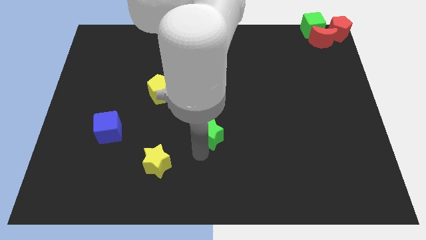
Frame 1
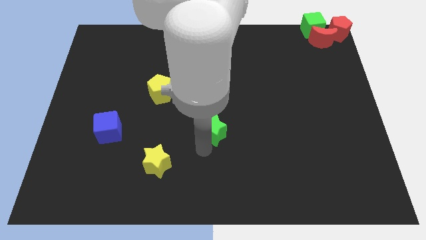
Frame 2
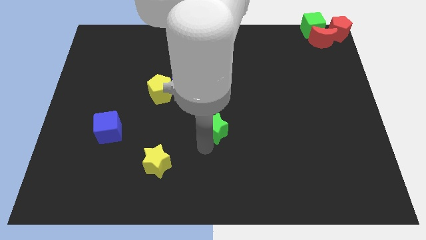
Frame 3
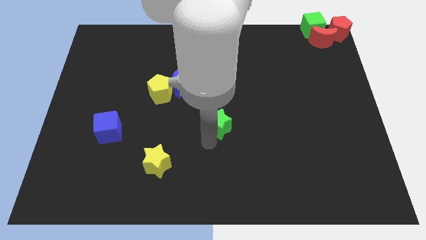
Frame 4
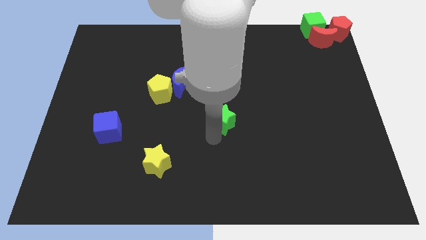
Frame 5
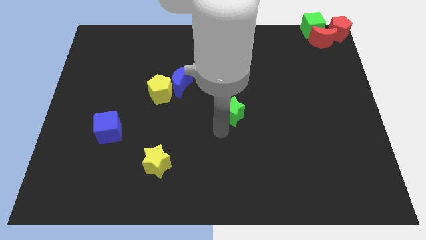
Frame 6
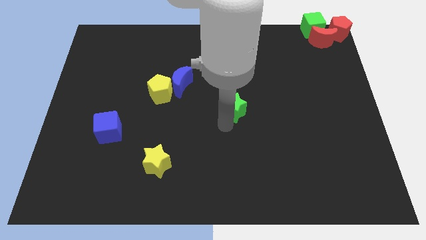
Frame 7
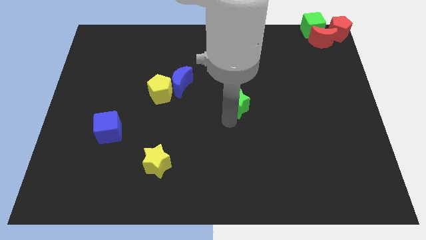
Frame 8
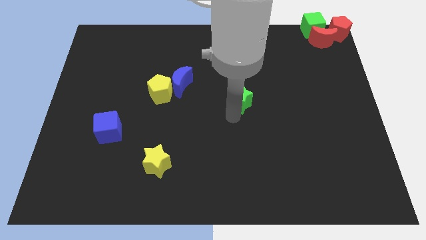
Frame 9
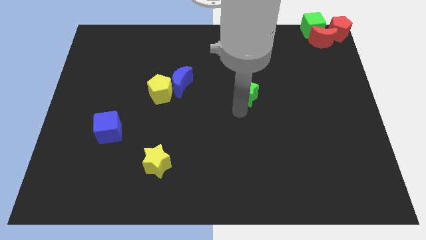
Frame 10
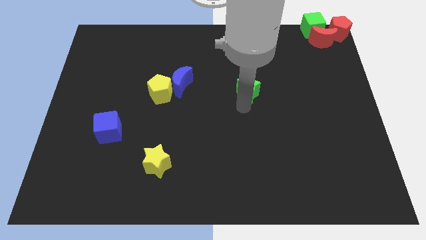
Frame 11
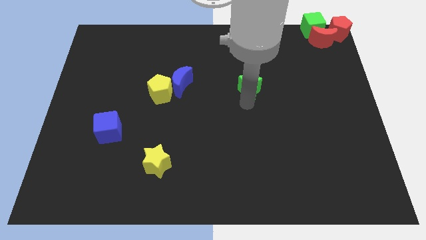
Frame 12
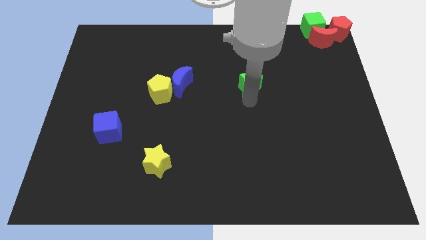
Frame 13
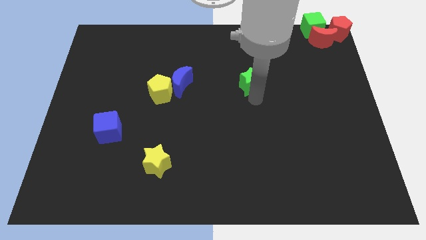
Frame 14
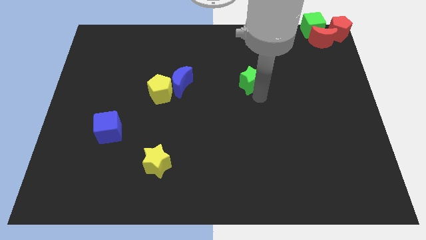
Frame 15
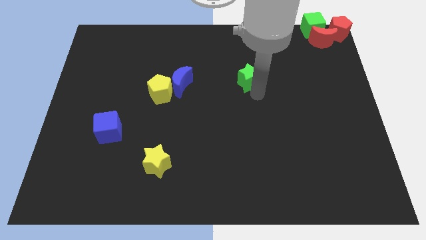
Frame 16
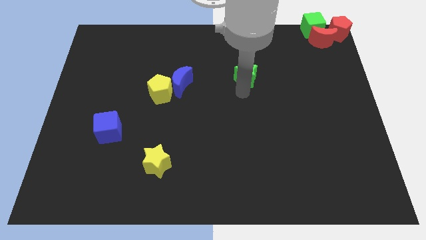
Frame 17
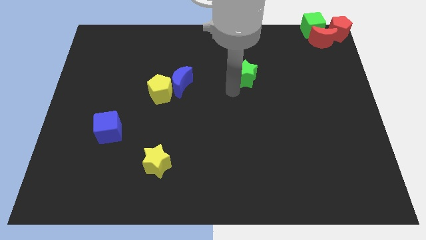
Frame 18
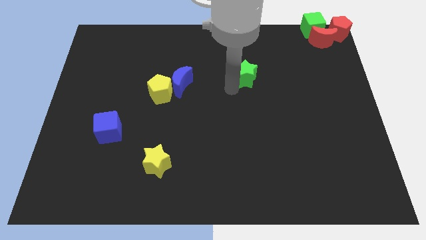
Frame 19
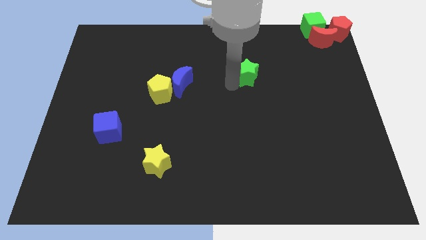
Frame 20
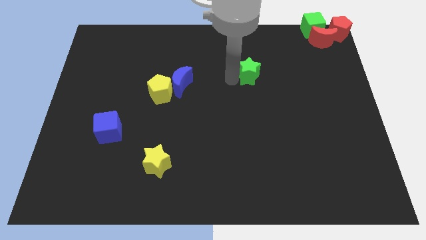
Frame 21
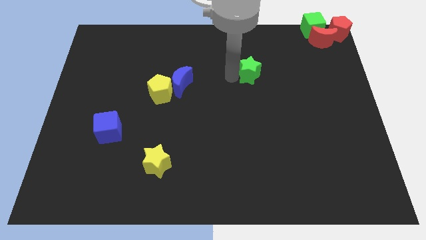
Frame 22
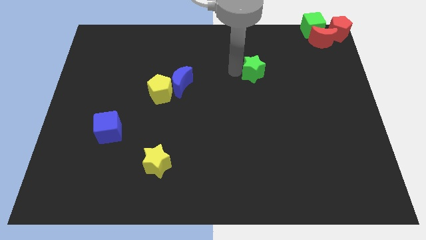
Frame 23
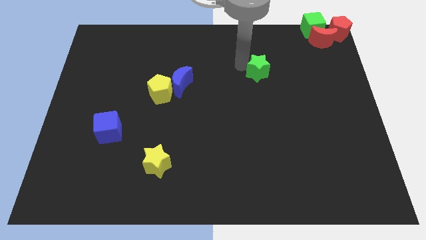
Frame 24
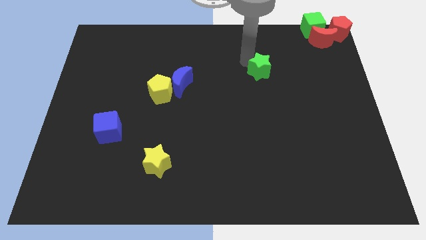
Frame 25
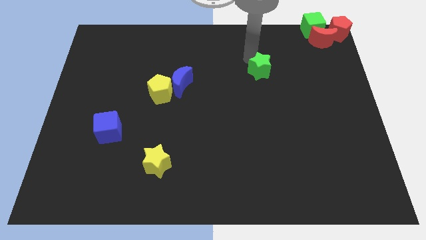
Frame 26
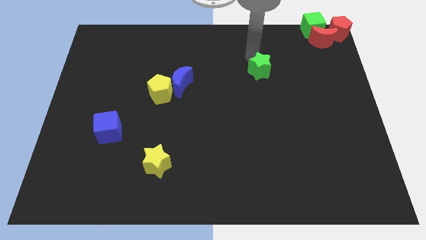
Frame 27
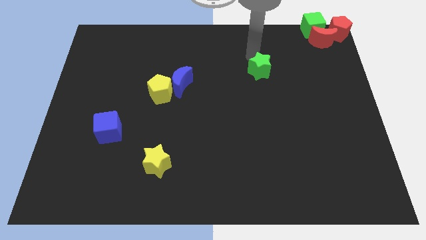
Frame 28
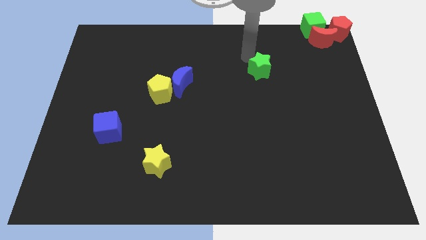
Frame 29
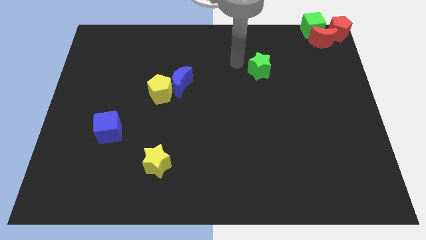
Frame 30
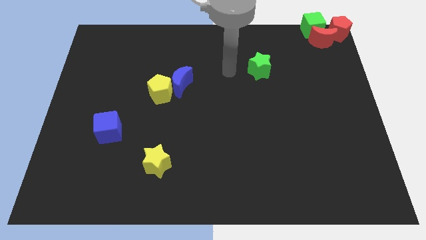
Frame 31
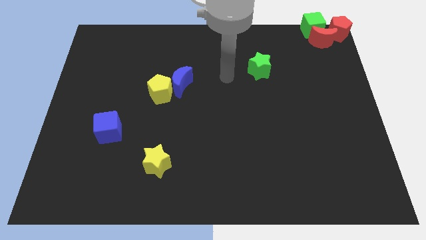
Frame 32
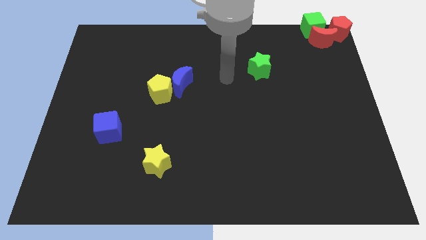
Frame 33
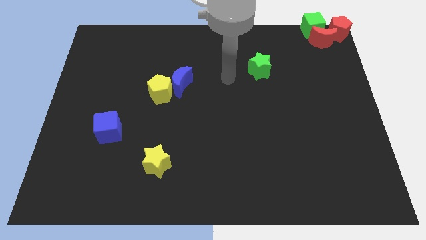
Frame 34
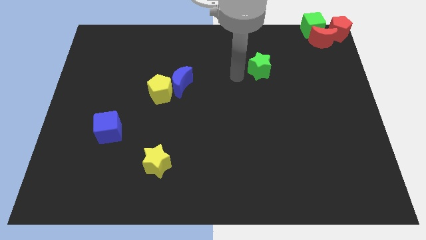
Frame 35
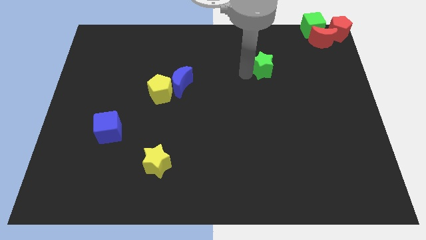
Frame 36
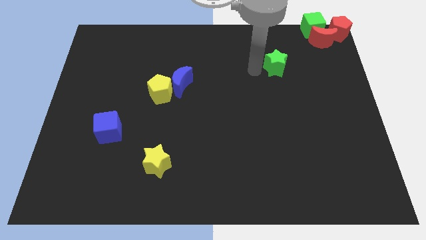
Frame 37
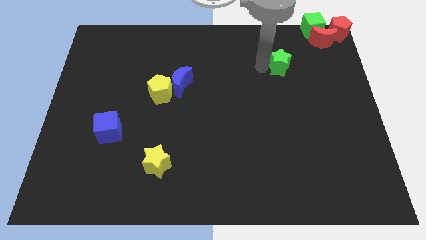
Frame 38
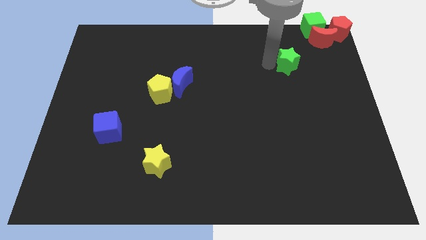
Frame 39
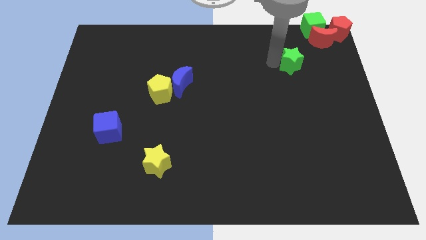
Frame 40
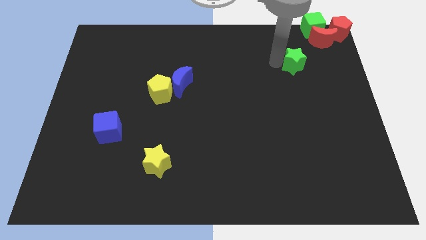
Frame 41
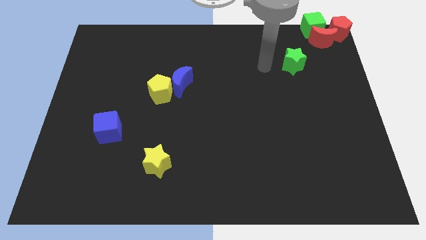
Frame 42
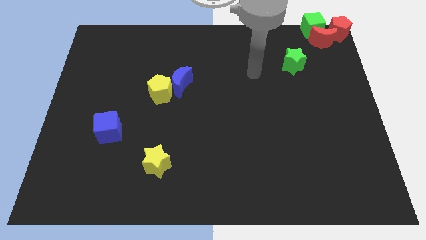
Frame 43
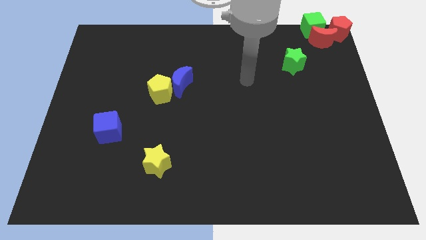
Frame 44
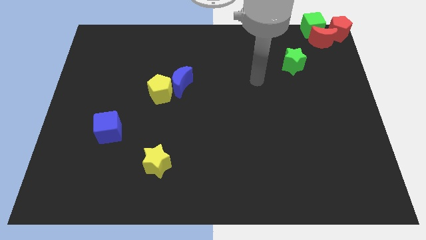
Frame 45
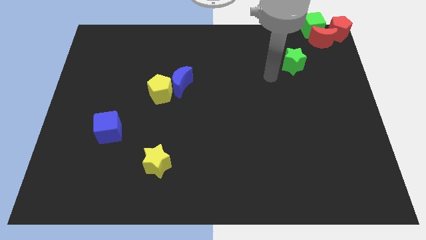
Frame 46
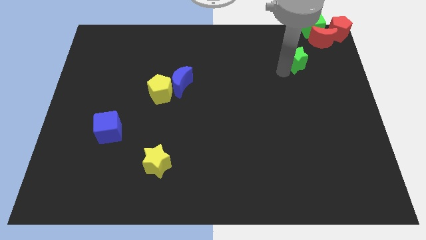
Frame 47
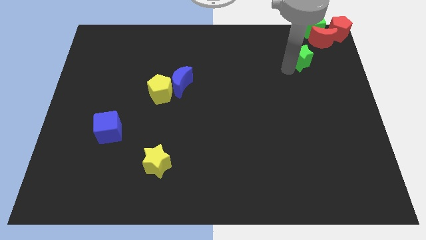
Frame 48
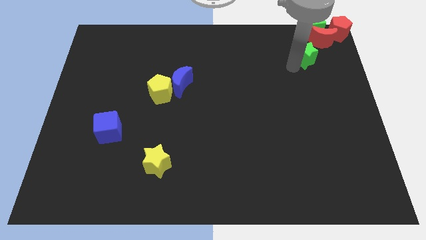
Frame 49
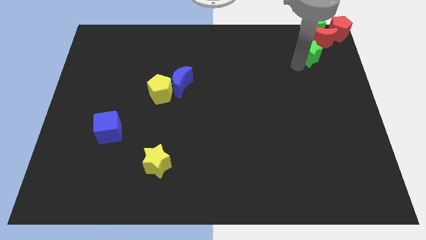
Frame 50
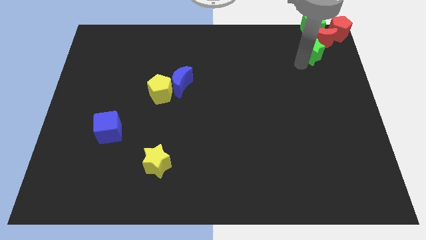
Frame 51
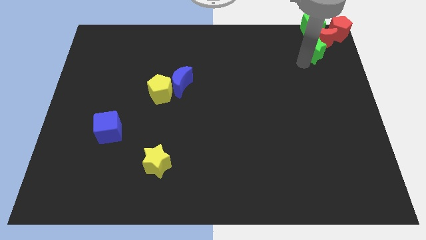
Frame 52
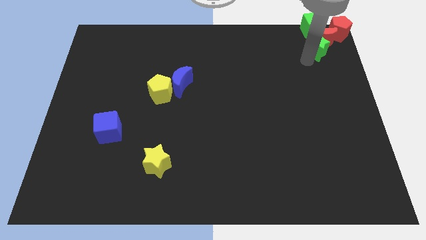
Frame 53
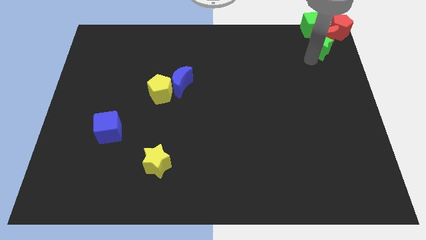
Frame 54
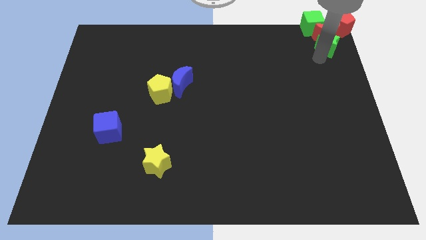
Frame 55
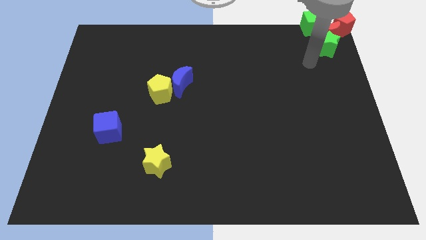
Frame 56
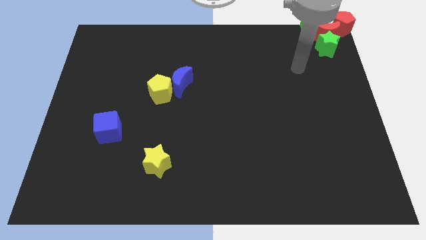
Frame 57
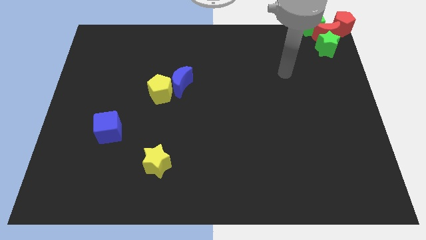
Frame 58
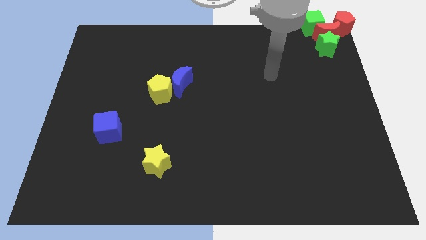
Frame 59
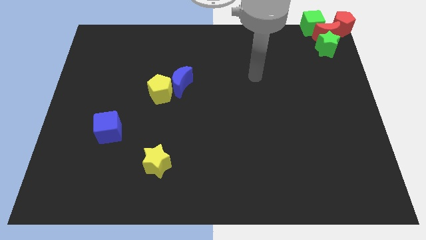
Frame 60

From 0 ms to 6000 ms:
push the green star into the red crescent

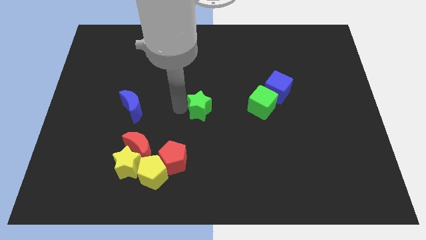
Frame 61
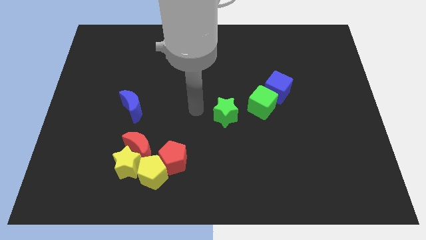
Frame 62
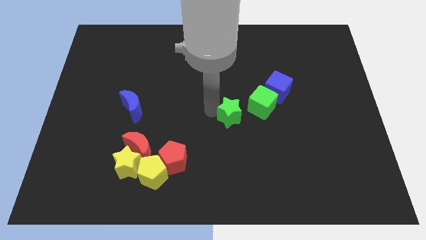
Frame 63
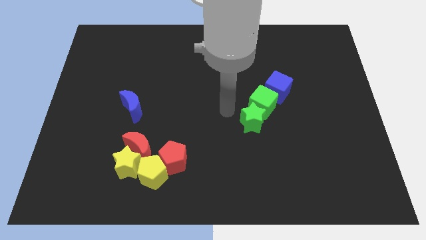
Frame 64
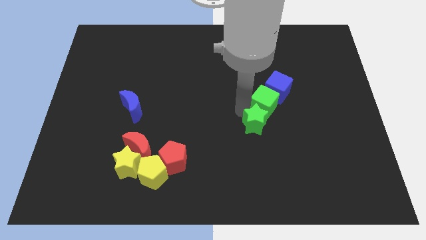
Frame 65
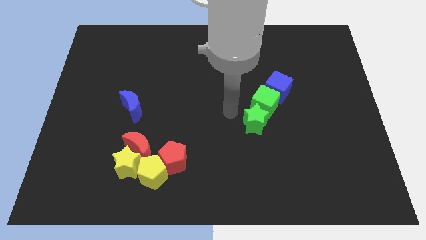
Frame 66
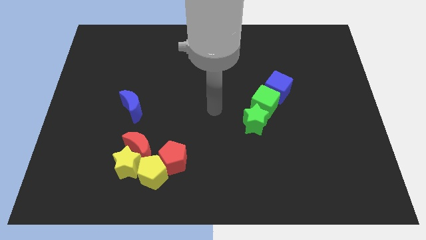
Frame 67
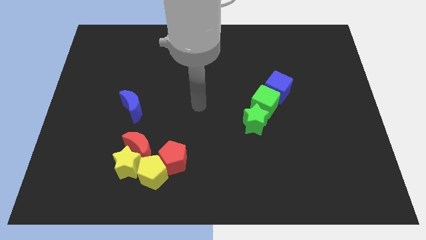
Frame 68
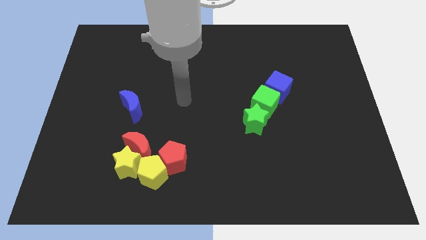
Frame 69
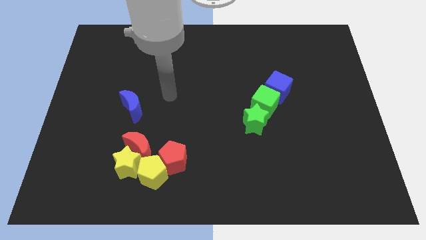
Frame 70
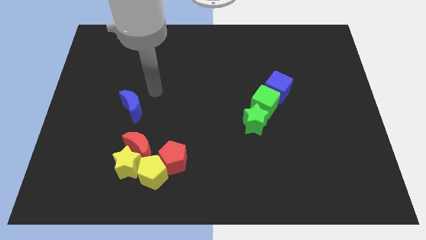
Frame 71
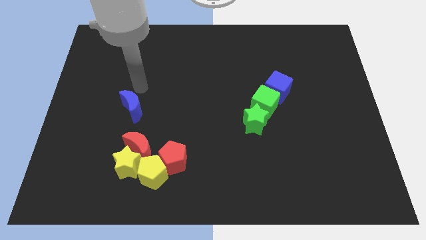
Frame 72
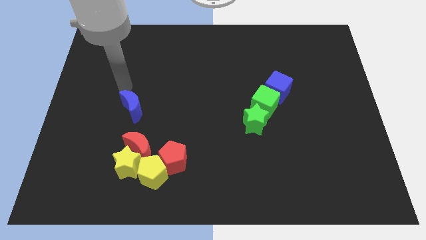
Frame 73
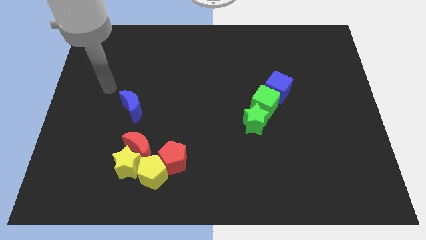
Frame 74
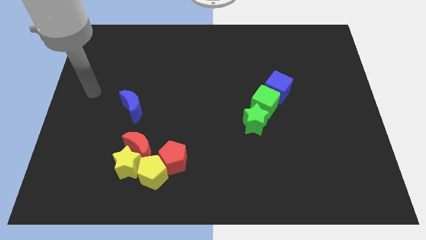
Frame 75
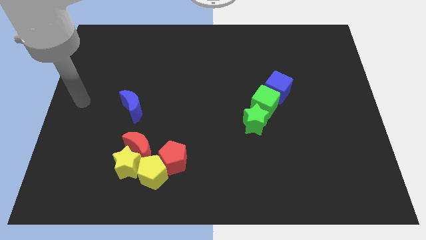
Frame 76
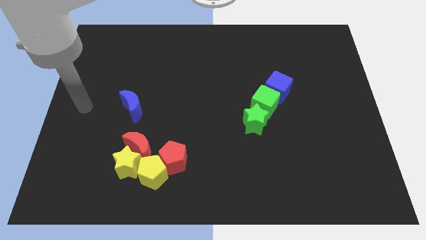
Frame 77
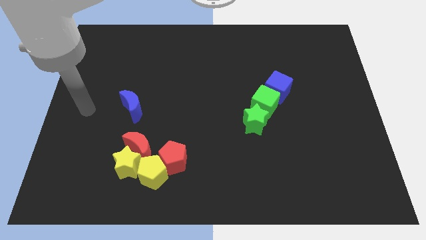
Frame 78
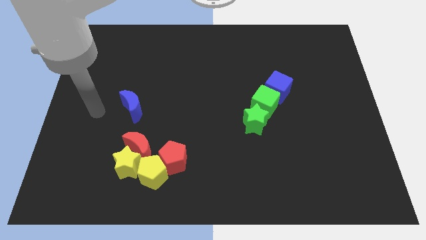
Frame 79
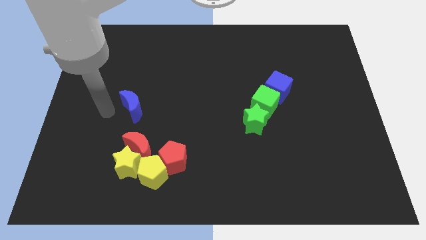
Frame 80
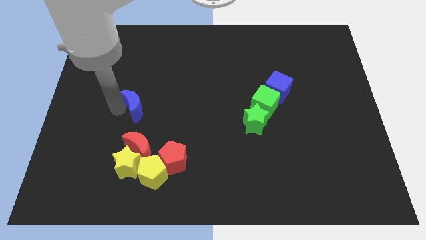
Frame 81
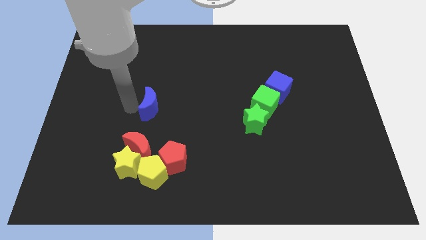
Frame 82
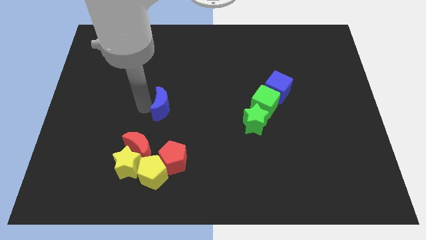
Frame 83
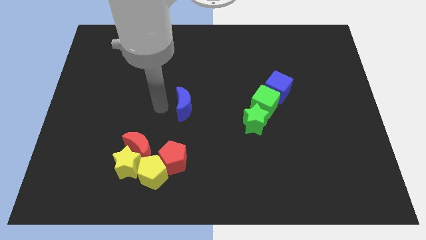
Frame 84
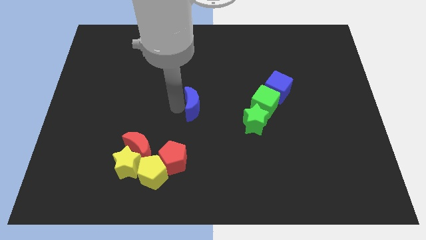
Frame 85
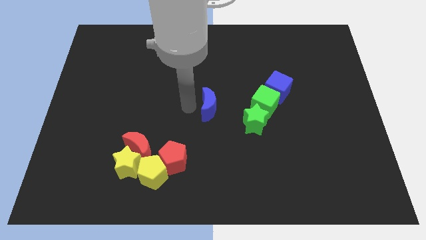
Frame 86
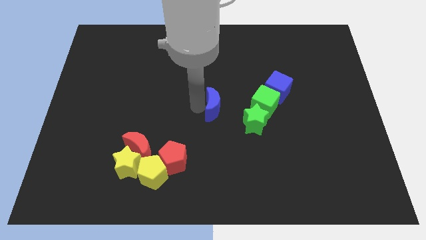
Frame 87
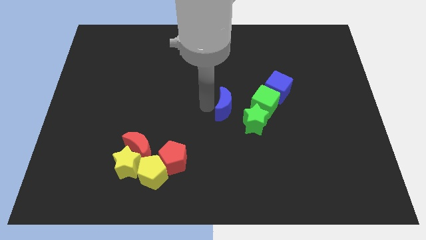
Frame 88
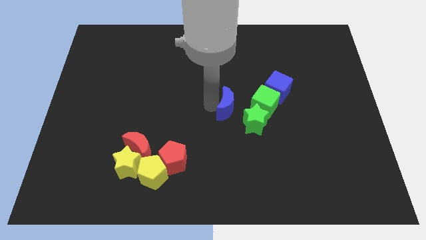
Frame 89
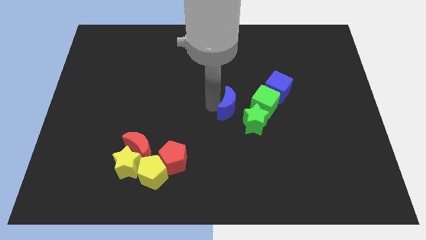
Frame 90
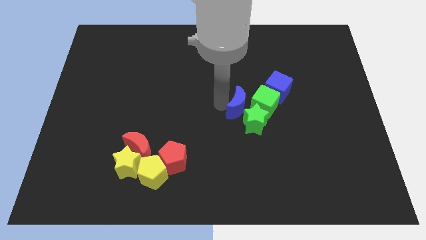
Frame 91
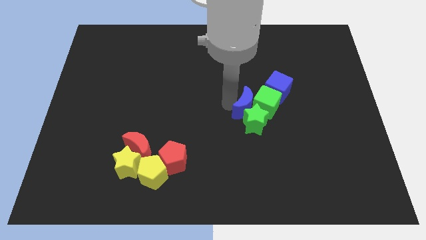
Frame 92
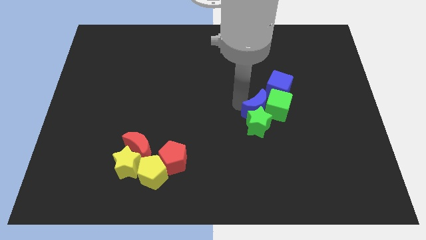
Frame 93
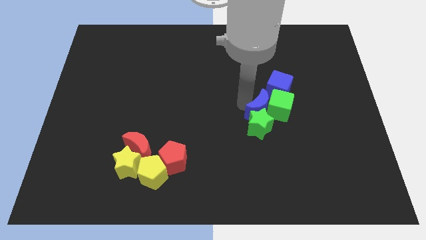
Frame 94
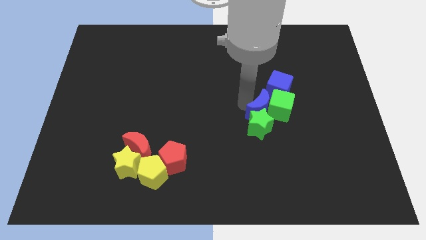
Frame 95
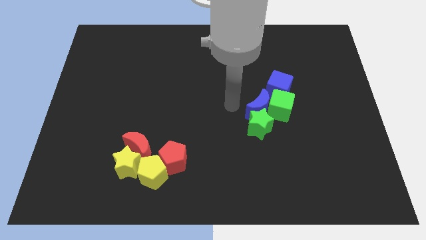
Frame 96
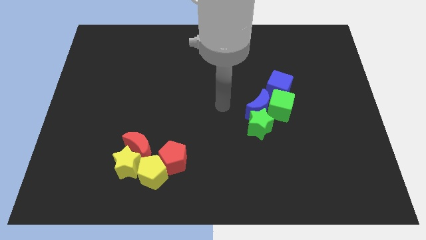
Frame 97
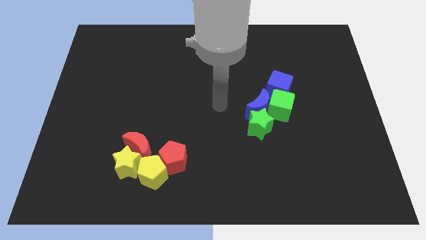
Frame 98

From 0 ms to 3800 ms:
move the green star and blue crescent into the green and blue cubes
